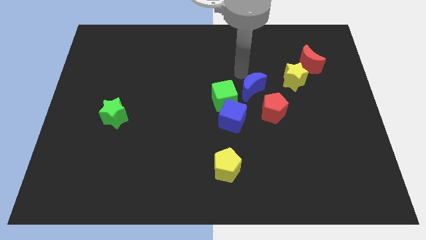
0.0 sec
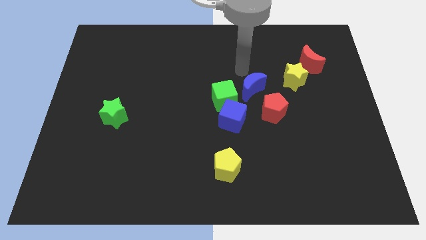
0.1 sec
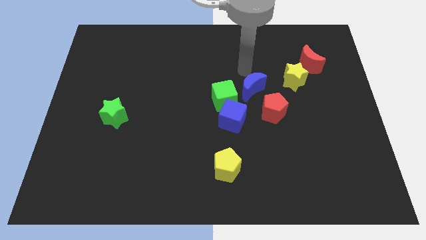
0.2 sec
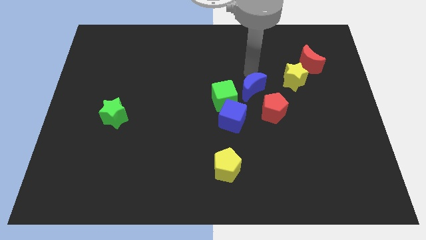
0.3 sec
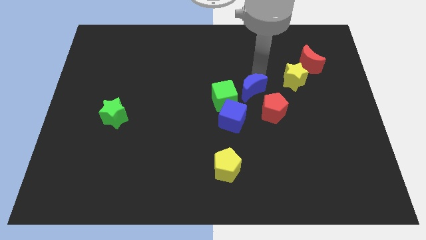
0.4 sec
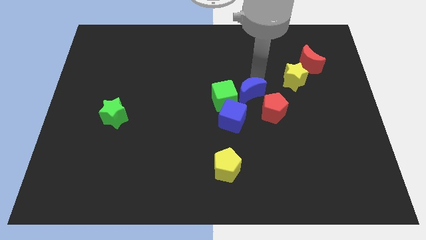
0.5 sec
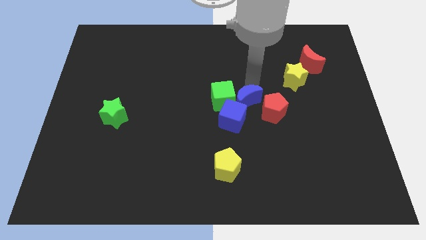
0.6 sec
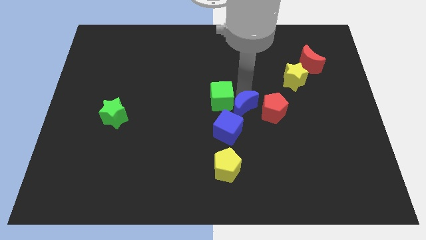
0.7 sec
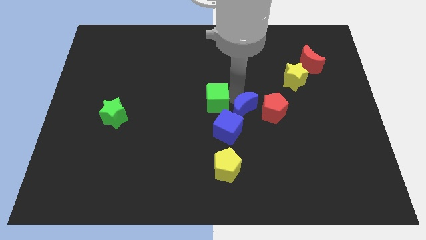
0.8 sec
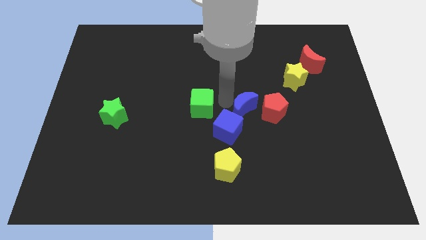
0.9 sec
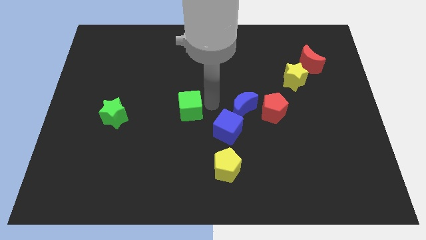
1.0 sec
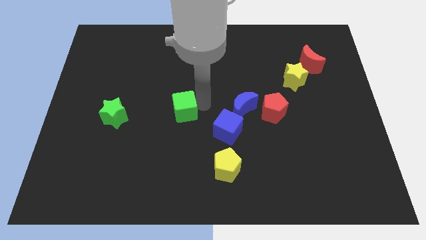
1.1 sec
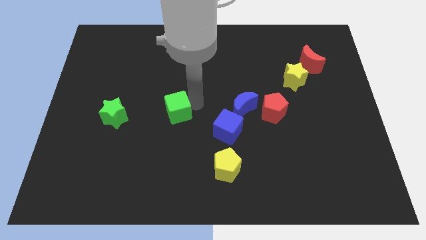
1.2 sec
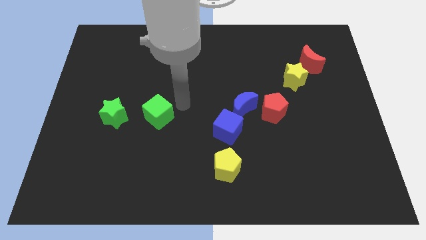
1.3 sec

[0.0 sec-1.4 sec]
push the blue moon into the blue cube

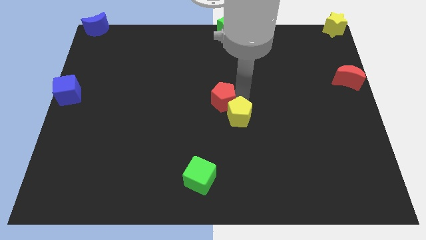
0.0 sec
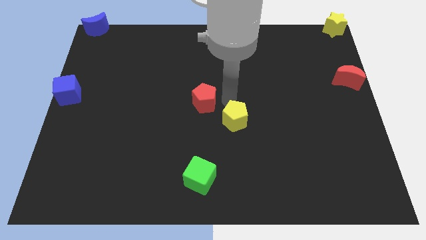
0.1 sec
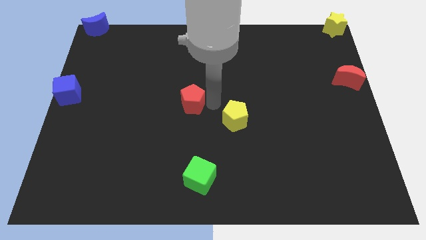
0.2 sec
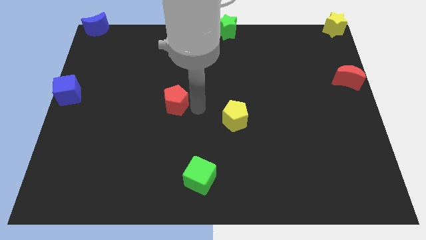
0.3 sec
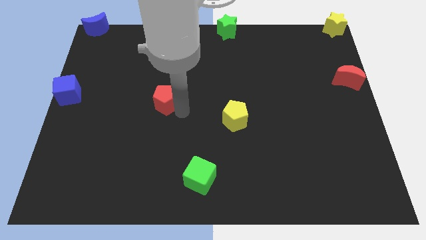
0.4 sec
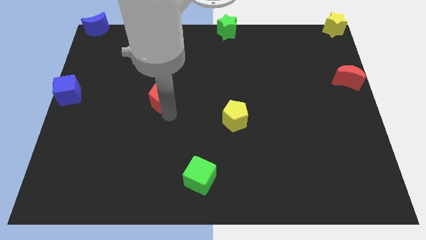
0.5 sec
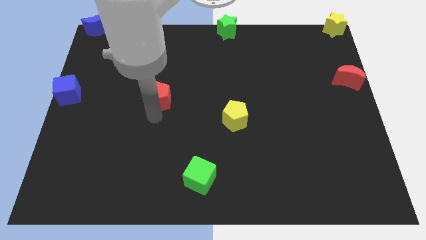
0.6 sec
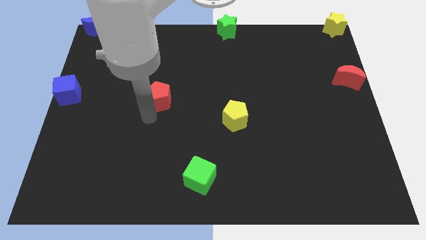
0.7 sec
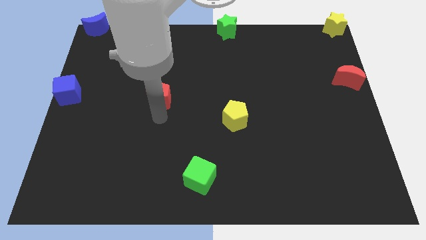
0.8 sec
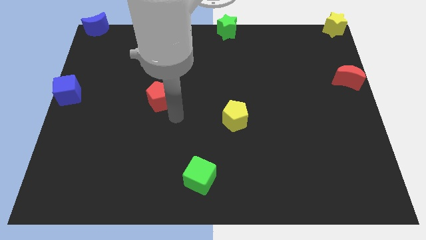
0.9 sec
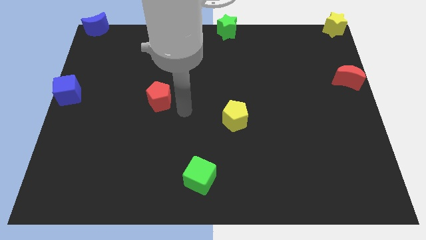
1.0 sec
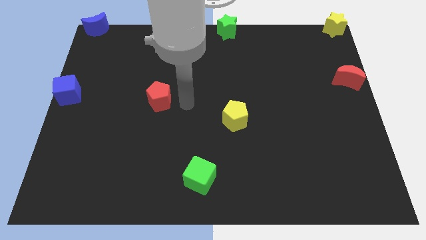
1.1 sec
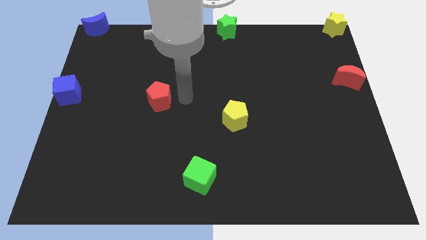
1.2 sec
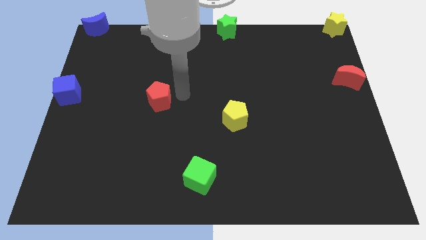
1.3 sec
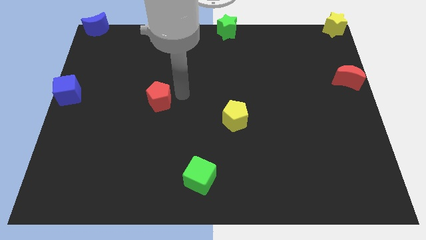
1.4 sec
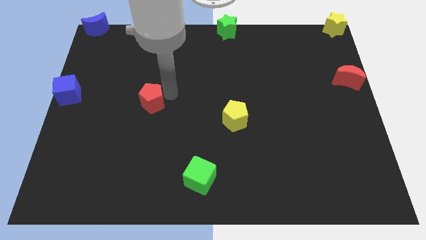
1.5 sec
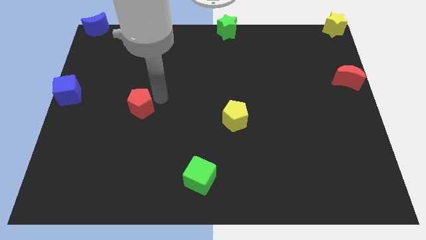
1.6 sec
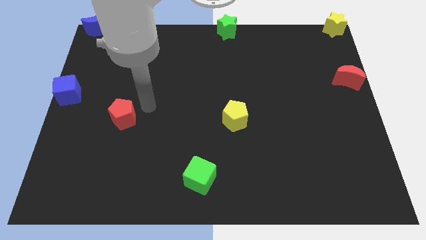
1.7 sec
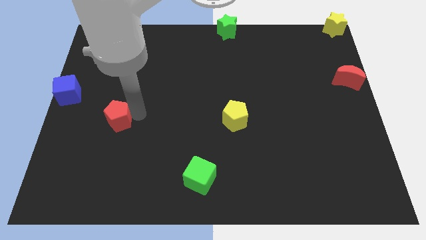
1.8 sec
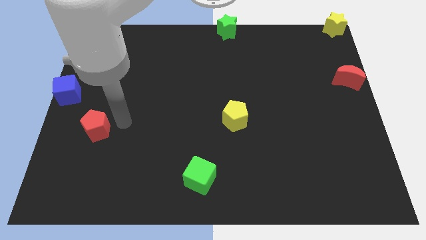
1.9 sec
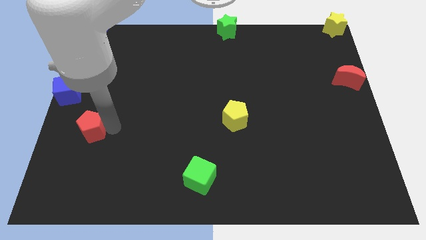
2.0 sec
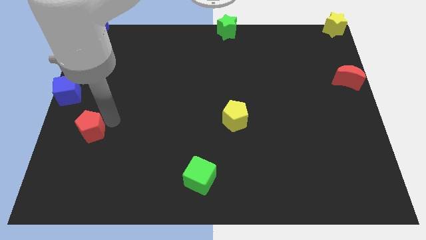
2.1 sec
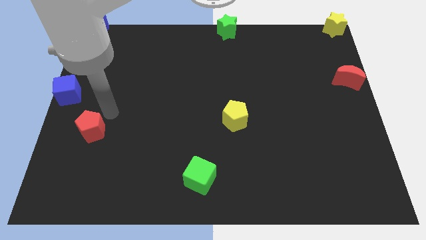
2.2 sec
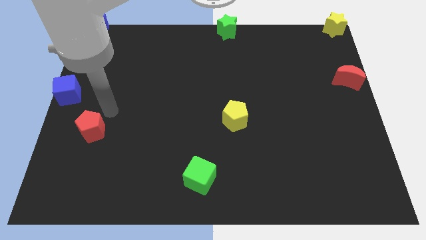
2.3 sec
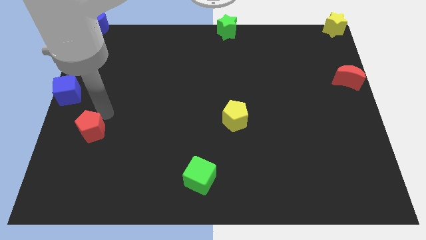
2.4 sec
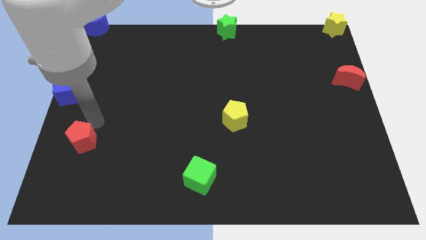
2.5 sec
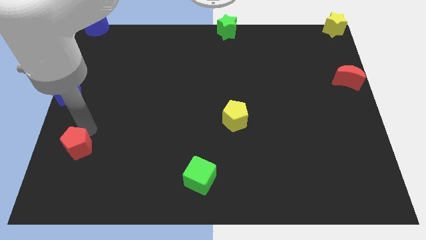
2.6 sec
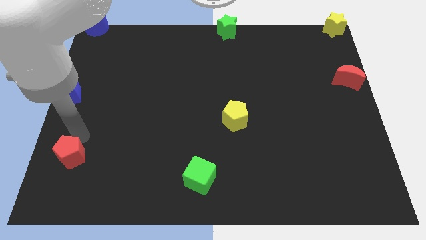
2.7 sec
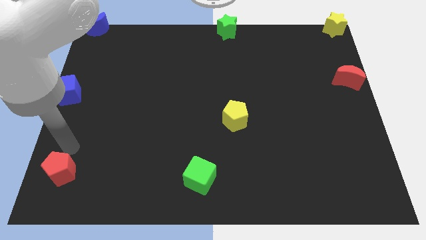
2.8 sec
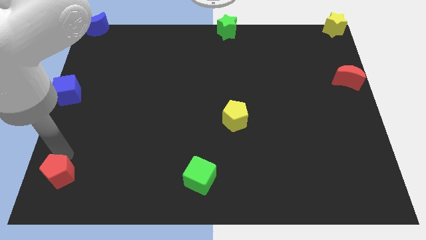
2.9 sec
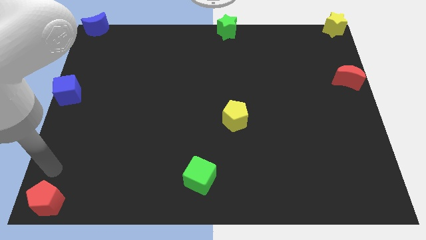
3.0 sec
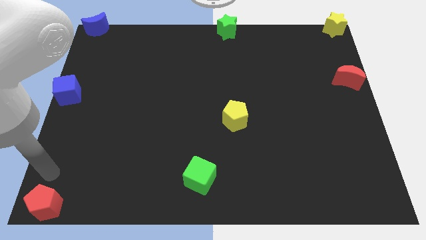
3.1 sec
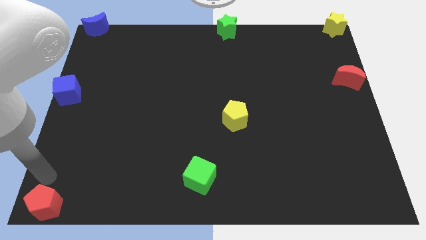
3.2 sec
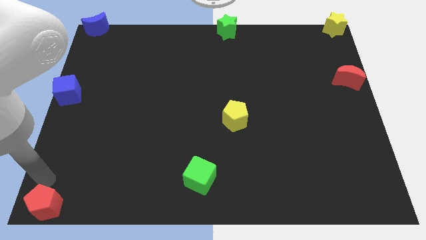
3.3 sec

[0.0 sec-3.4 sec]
push the red pentagon to the bottom left corner of the board

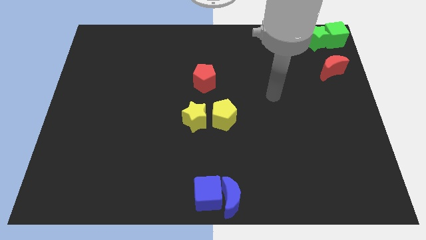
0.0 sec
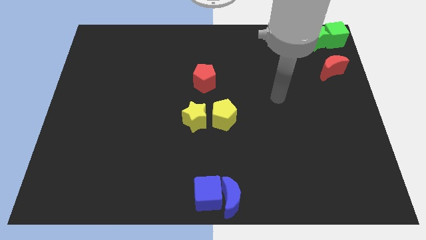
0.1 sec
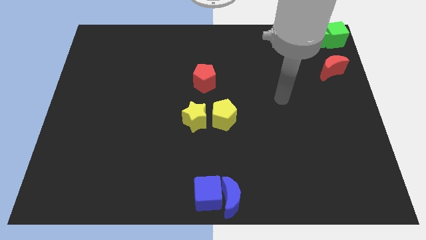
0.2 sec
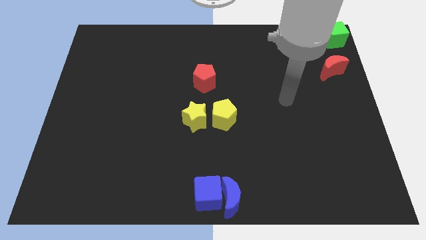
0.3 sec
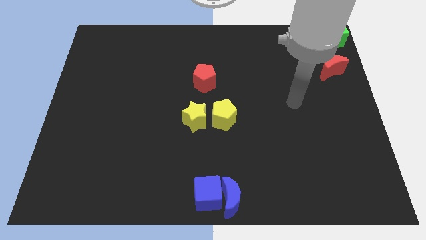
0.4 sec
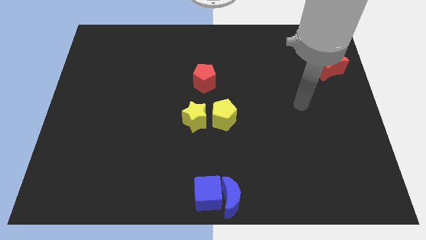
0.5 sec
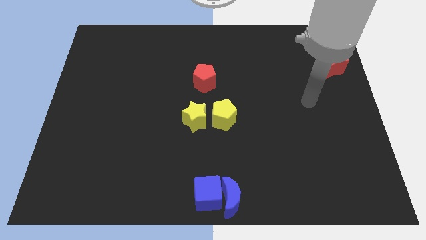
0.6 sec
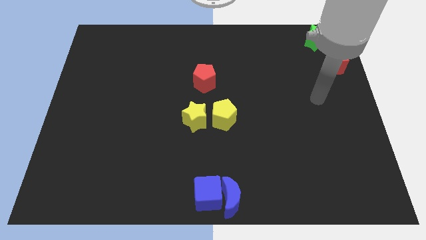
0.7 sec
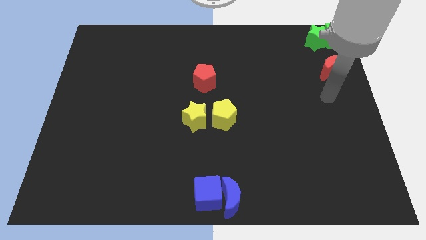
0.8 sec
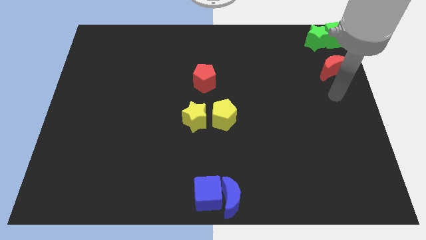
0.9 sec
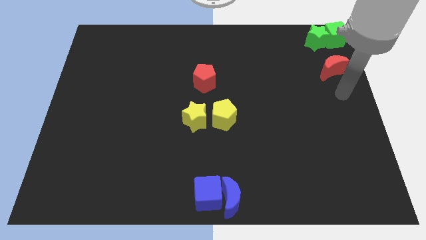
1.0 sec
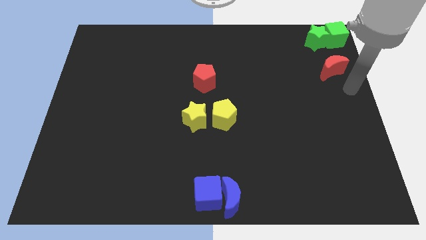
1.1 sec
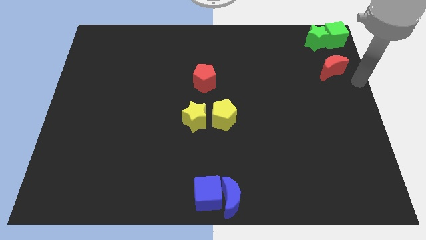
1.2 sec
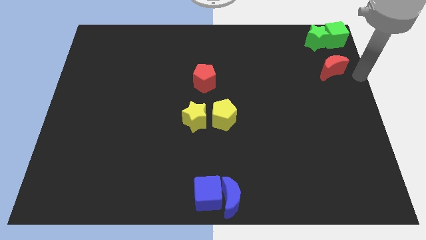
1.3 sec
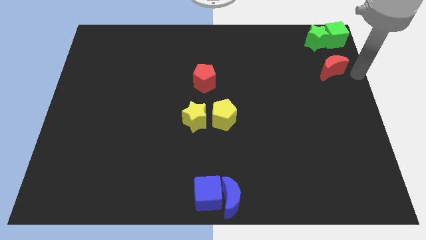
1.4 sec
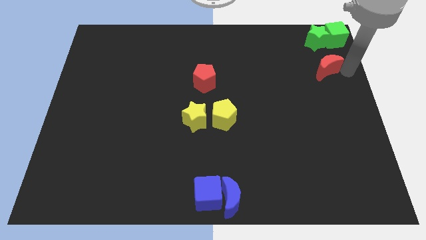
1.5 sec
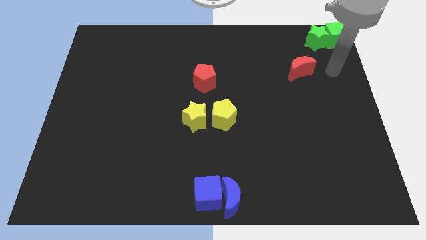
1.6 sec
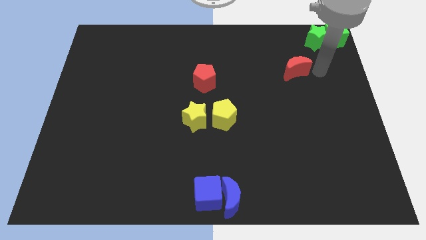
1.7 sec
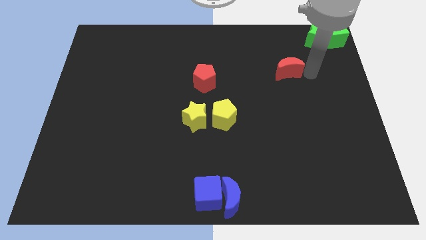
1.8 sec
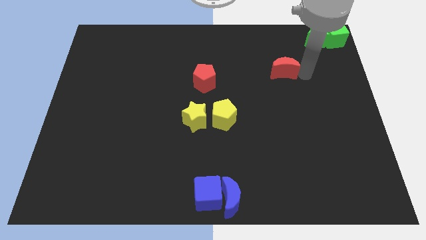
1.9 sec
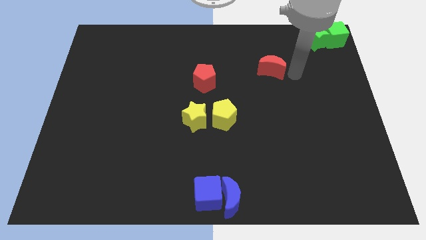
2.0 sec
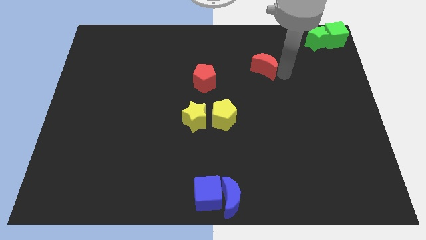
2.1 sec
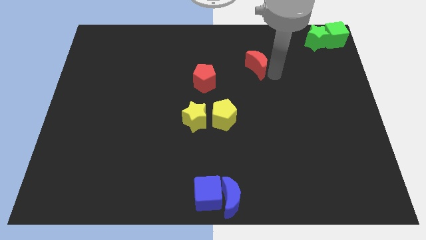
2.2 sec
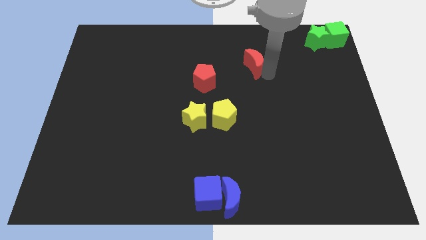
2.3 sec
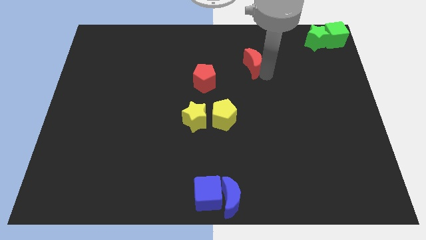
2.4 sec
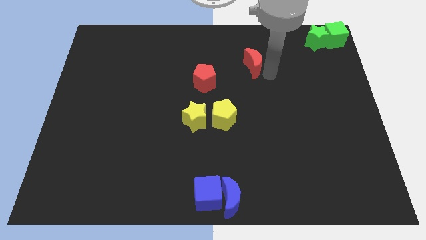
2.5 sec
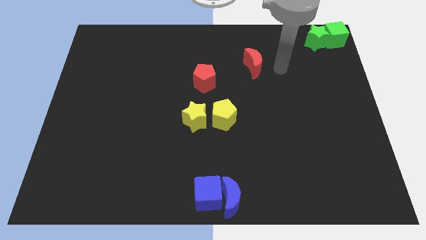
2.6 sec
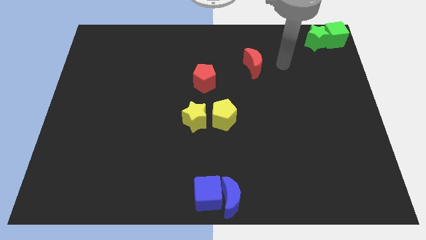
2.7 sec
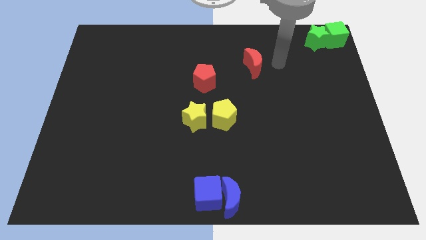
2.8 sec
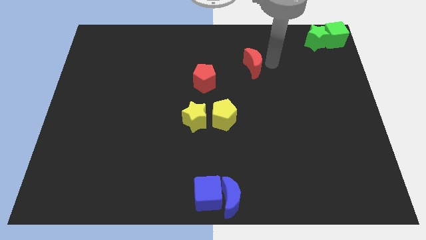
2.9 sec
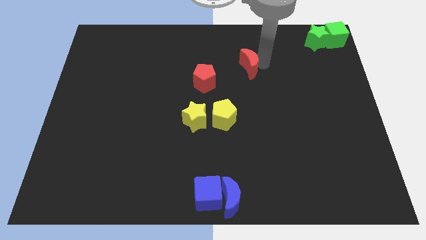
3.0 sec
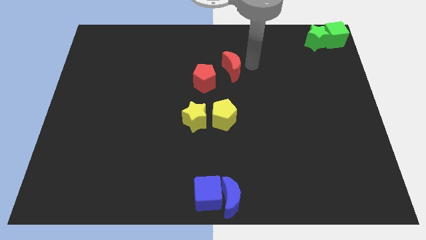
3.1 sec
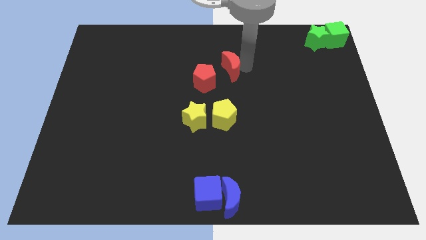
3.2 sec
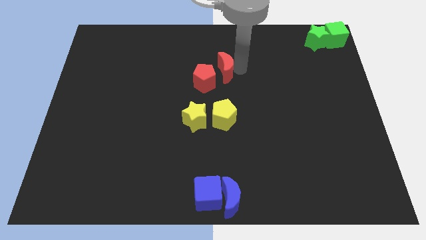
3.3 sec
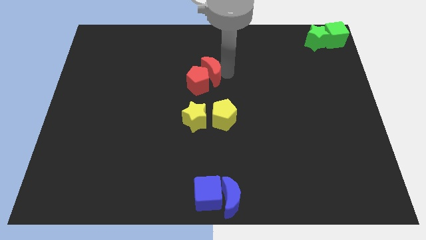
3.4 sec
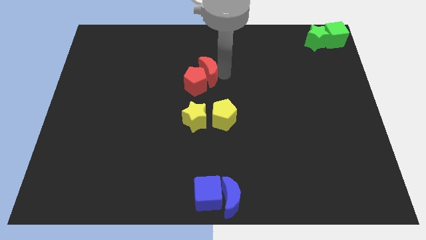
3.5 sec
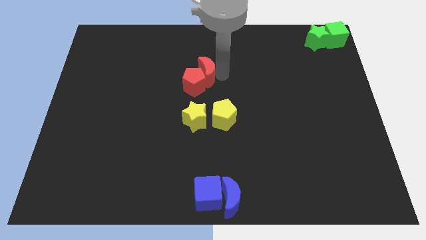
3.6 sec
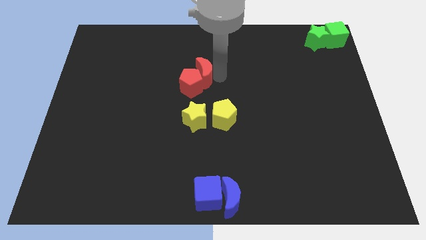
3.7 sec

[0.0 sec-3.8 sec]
push red moon into red pentagon

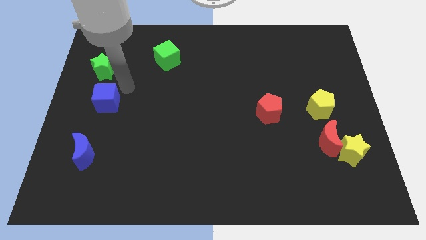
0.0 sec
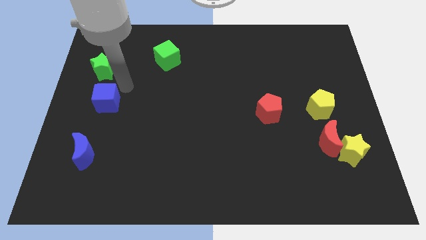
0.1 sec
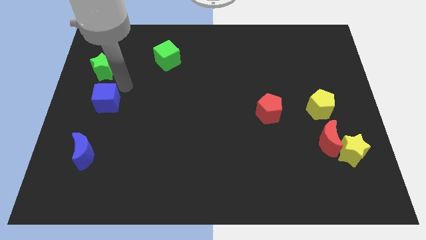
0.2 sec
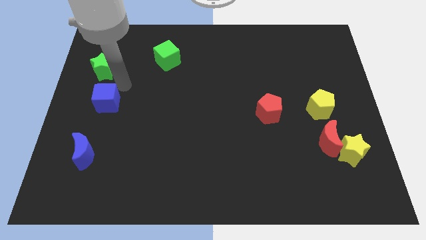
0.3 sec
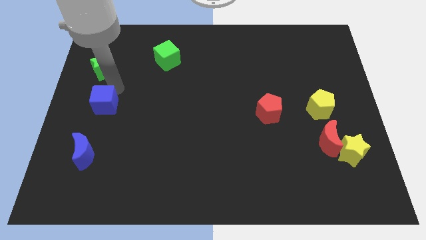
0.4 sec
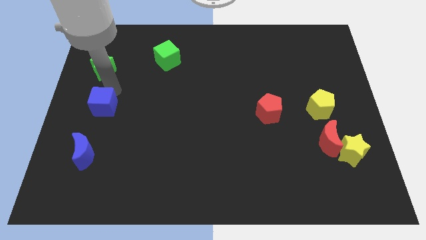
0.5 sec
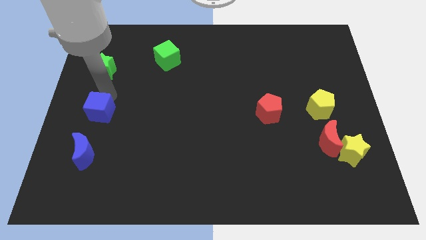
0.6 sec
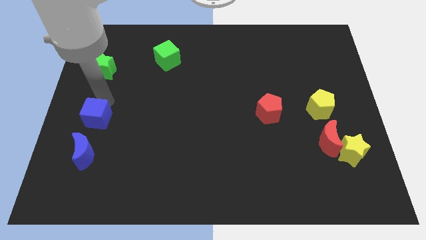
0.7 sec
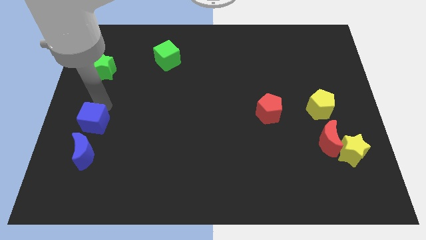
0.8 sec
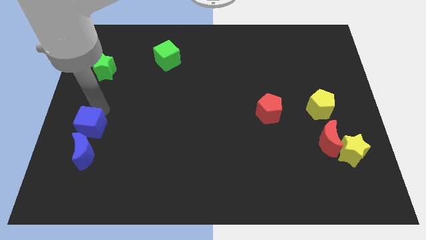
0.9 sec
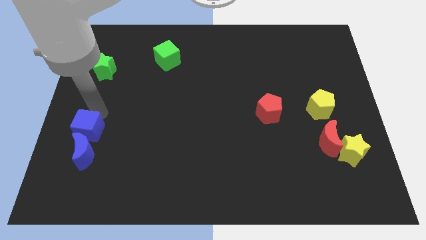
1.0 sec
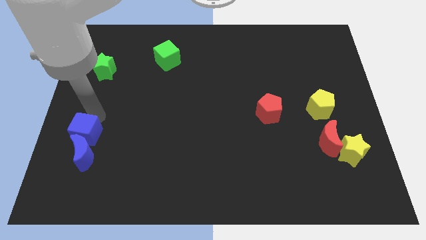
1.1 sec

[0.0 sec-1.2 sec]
move blue cube above blue moon
